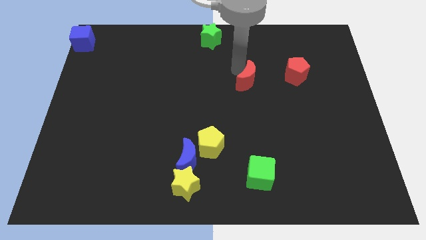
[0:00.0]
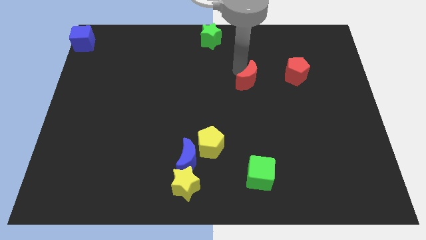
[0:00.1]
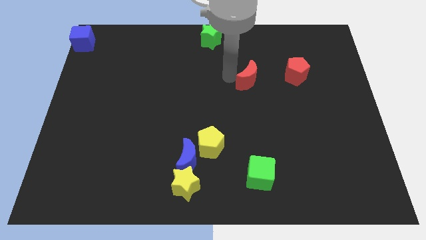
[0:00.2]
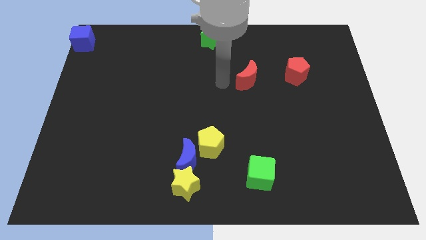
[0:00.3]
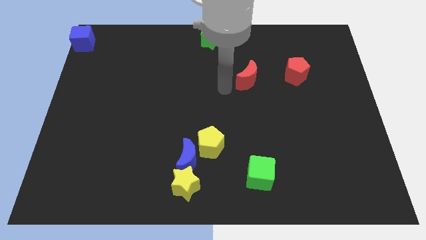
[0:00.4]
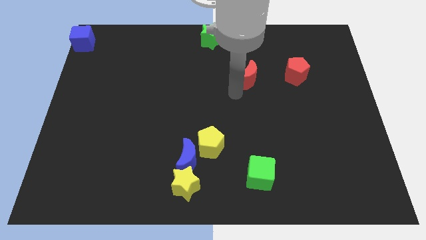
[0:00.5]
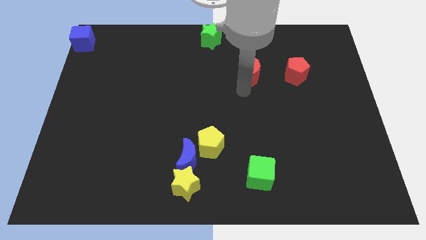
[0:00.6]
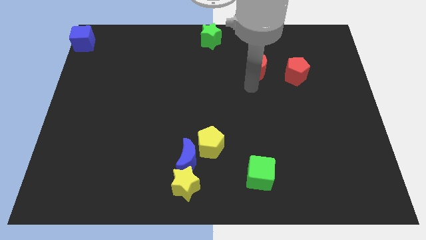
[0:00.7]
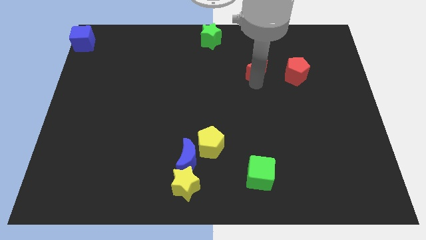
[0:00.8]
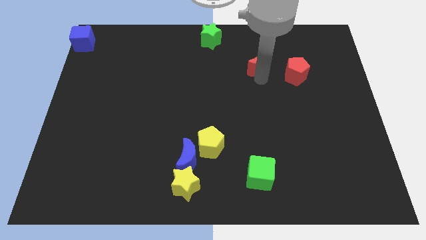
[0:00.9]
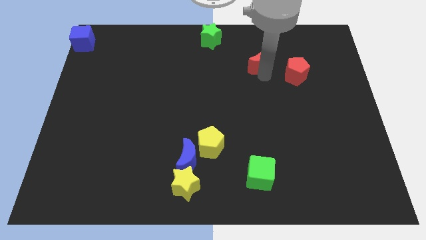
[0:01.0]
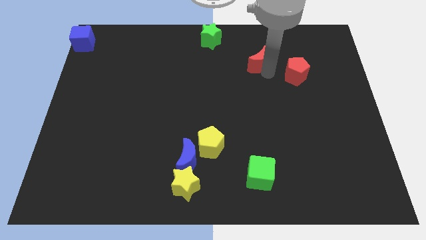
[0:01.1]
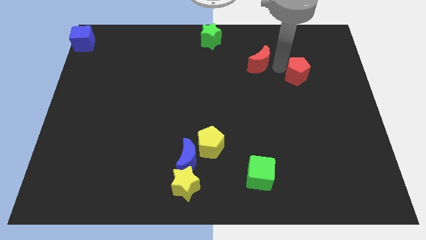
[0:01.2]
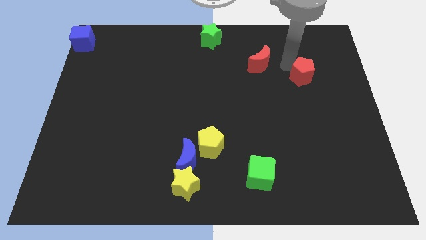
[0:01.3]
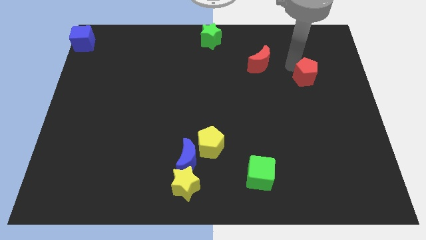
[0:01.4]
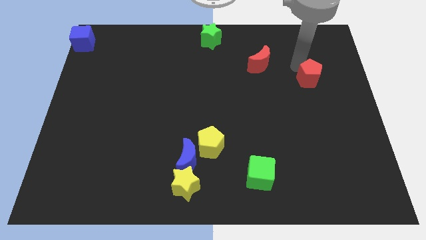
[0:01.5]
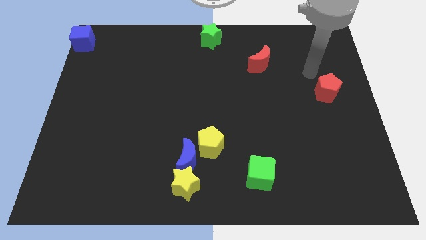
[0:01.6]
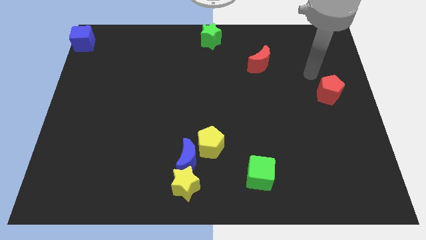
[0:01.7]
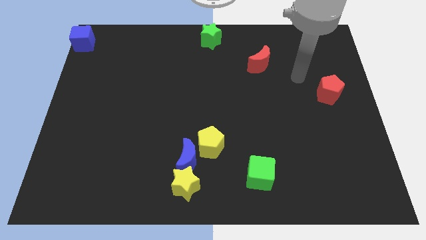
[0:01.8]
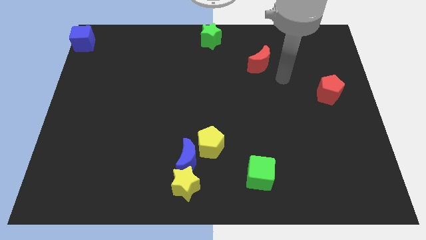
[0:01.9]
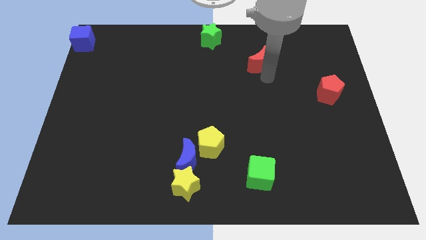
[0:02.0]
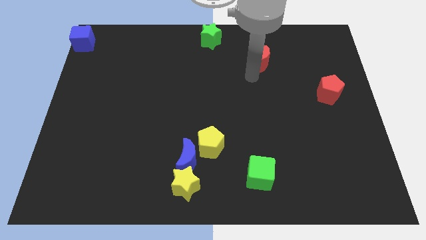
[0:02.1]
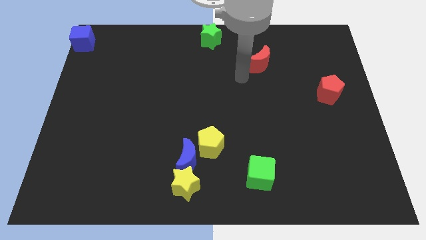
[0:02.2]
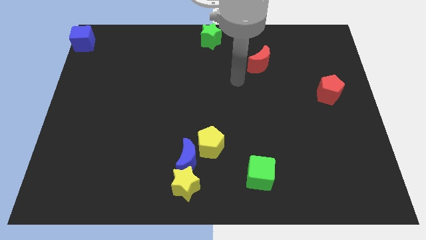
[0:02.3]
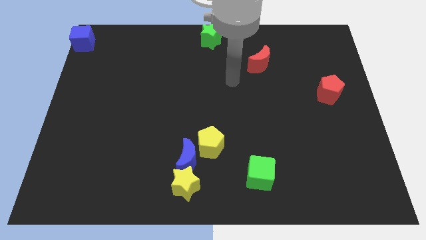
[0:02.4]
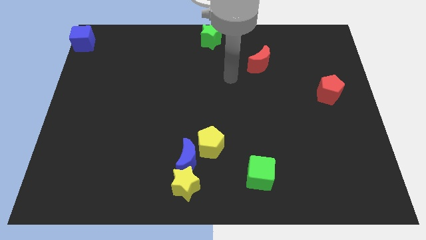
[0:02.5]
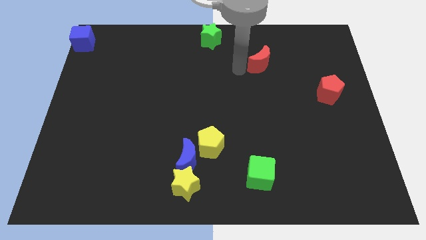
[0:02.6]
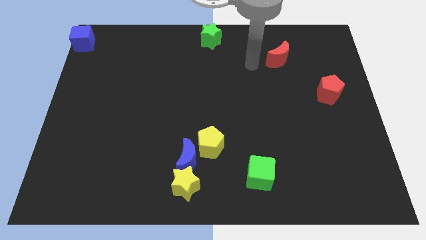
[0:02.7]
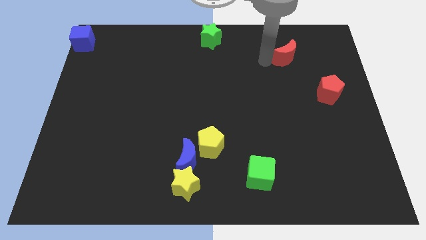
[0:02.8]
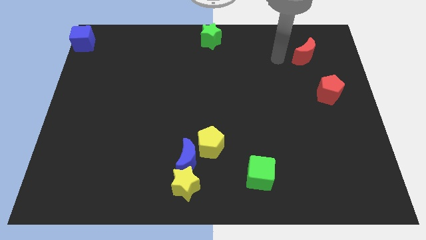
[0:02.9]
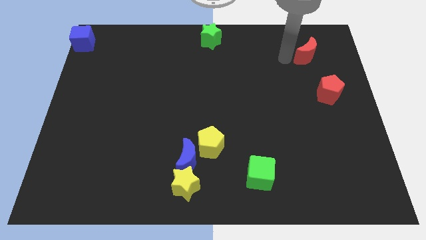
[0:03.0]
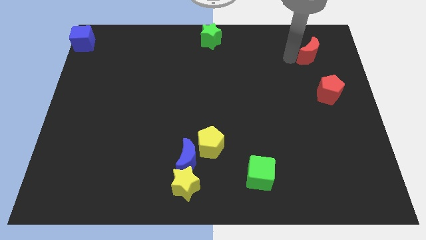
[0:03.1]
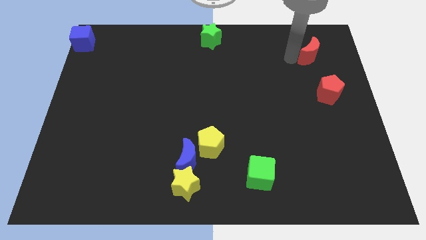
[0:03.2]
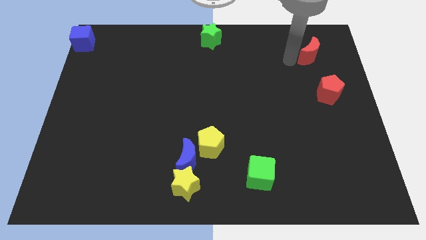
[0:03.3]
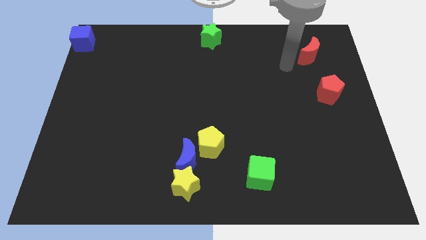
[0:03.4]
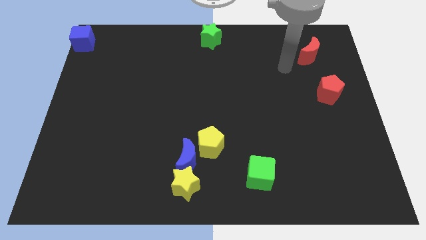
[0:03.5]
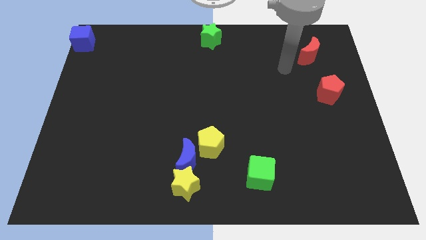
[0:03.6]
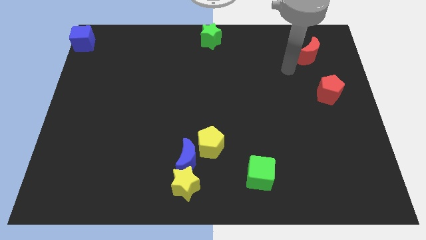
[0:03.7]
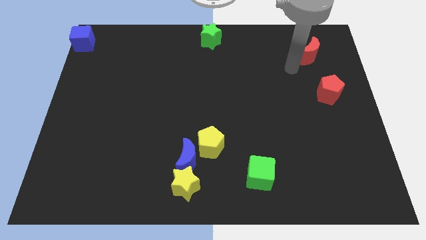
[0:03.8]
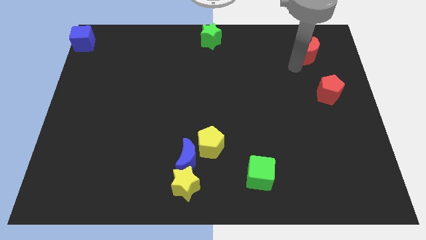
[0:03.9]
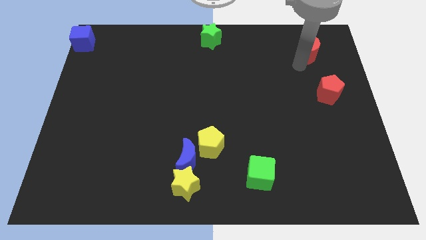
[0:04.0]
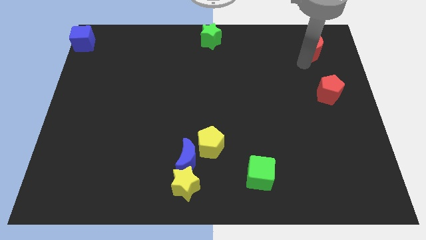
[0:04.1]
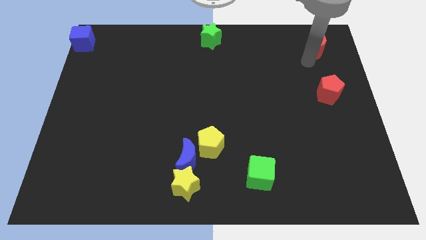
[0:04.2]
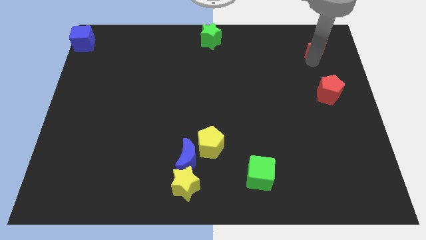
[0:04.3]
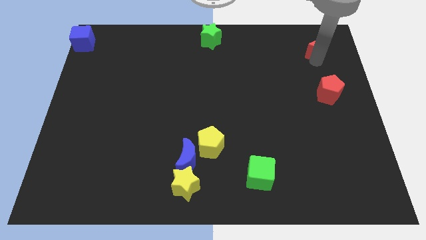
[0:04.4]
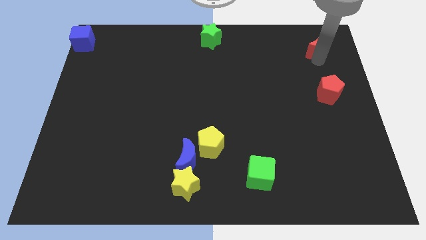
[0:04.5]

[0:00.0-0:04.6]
move the red crescent vertically above the red pentagon

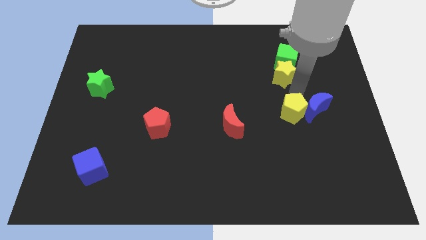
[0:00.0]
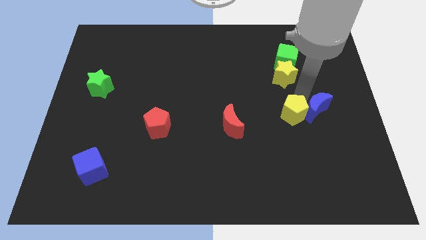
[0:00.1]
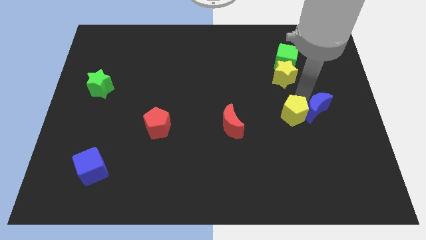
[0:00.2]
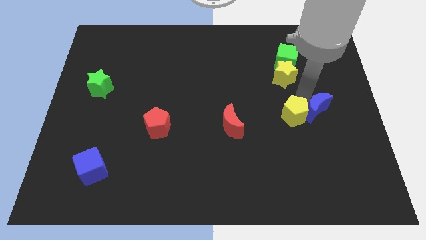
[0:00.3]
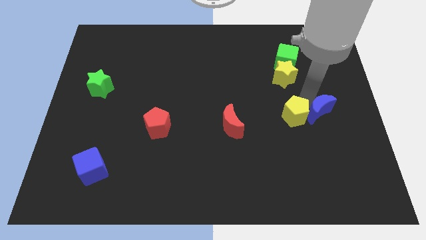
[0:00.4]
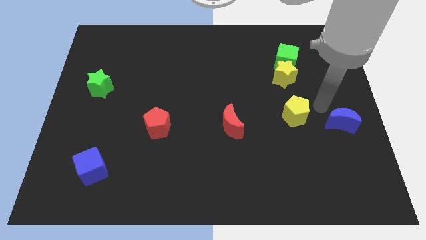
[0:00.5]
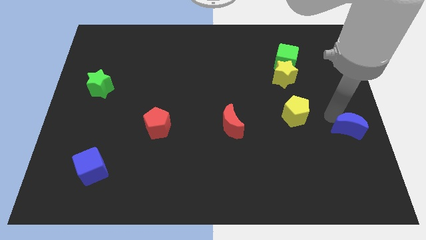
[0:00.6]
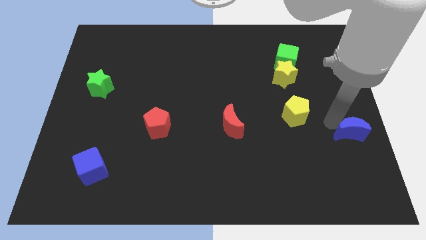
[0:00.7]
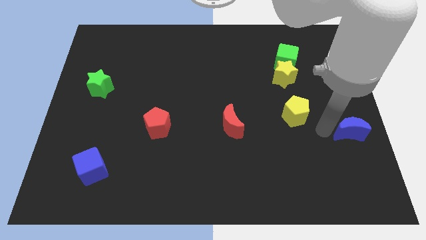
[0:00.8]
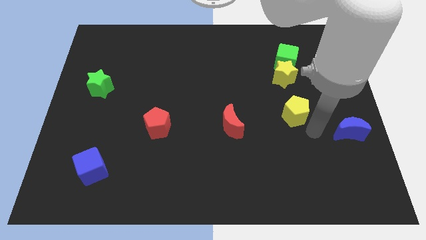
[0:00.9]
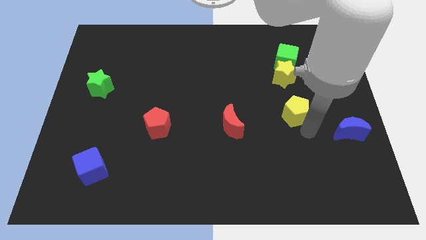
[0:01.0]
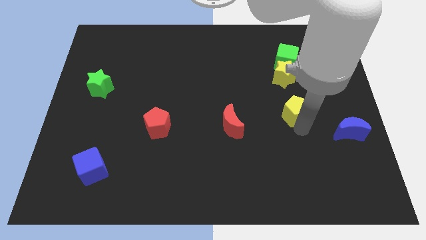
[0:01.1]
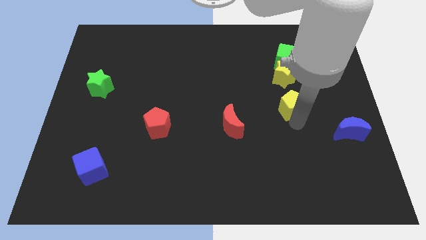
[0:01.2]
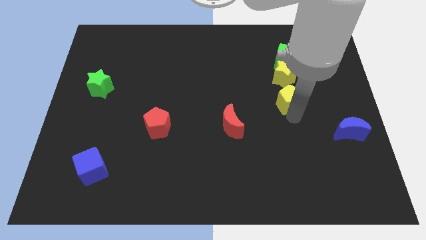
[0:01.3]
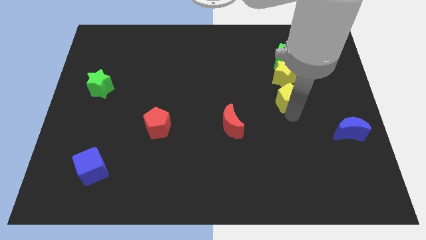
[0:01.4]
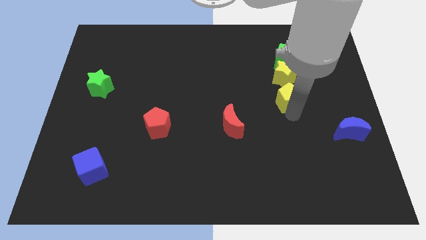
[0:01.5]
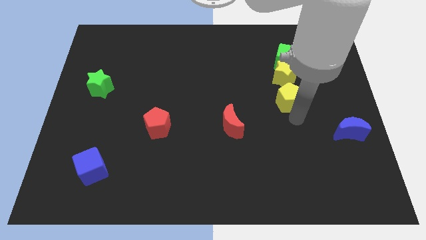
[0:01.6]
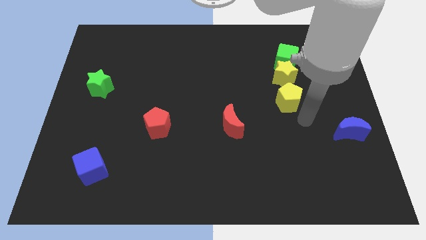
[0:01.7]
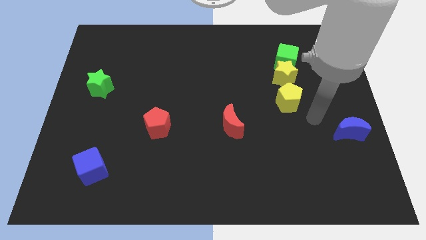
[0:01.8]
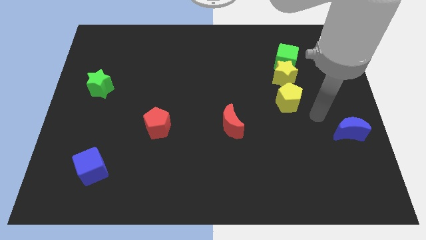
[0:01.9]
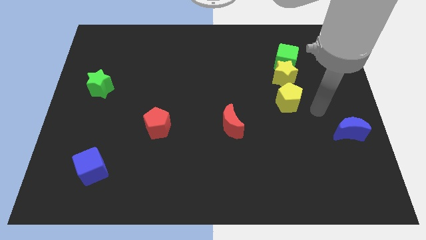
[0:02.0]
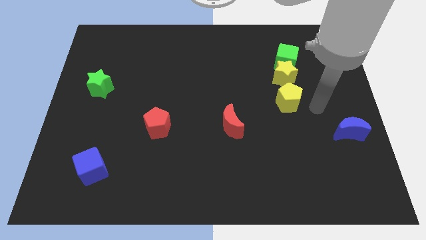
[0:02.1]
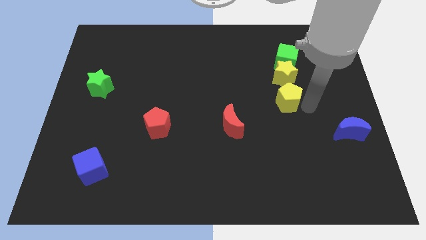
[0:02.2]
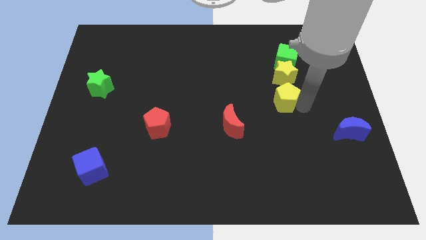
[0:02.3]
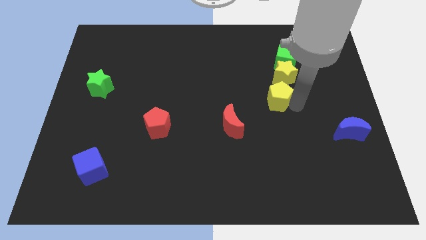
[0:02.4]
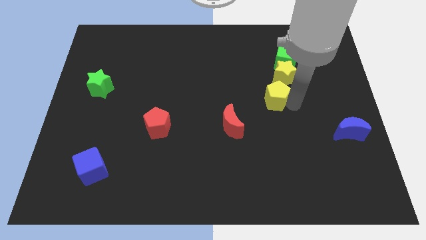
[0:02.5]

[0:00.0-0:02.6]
move the yellow pentagon diagonally bottom left to the yellow star

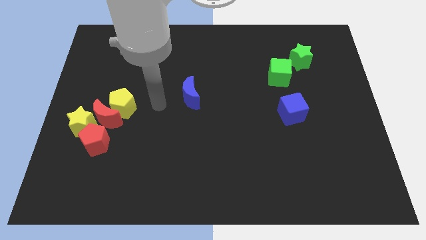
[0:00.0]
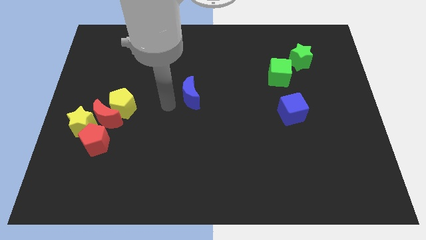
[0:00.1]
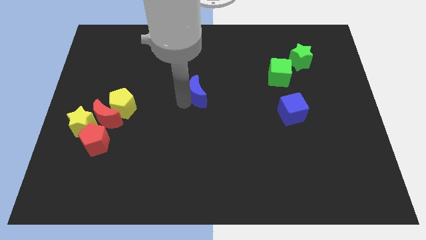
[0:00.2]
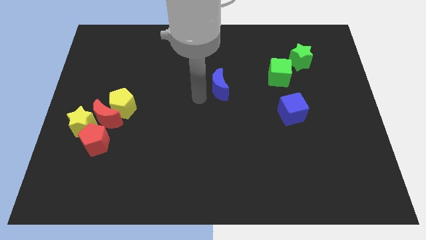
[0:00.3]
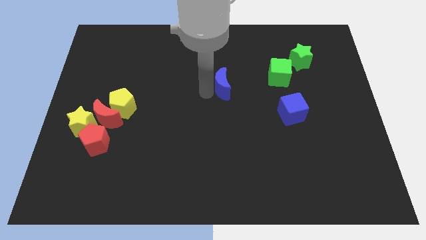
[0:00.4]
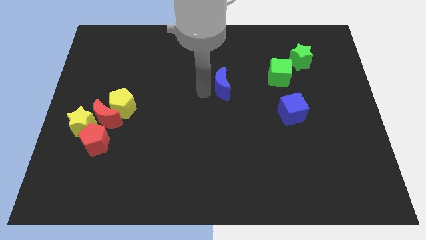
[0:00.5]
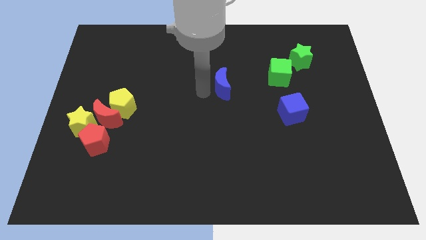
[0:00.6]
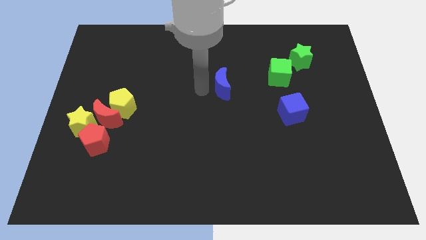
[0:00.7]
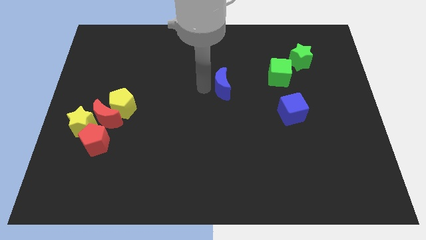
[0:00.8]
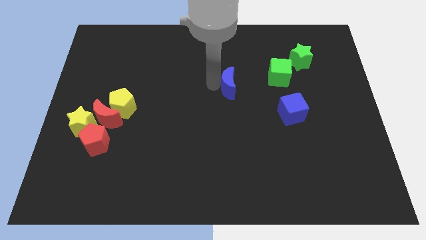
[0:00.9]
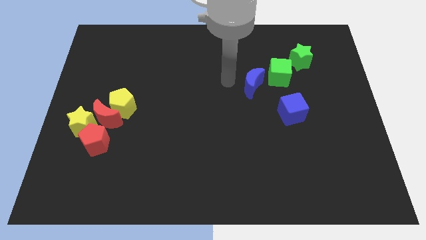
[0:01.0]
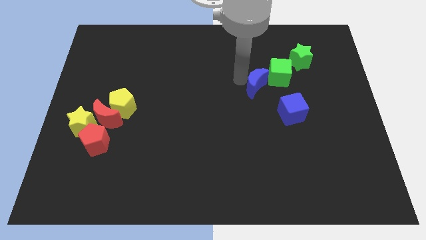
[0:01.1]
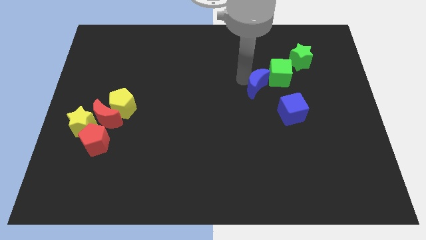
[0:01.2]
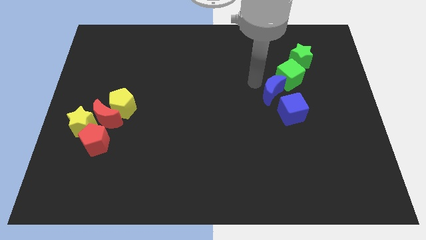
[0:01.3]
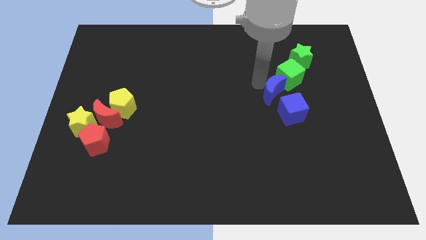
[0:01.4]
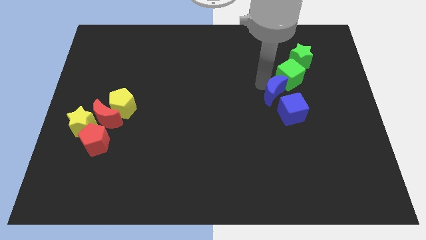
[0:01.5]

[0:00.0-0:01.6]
push the blue moon towards the green cube

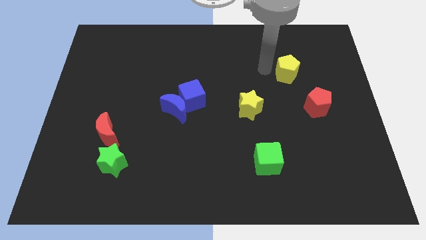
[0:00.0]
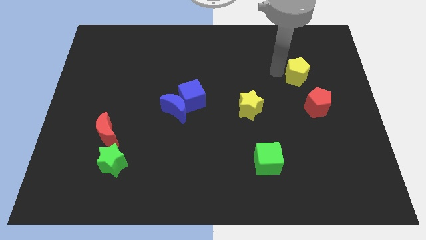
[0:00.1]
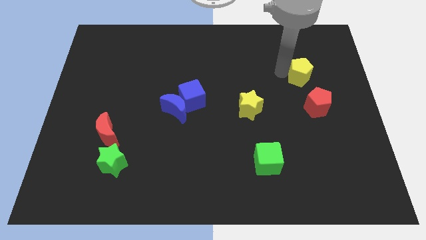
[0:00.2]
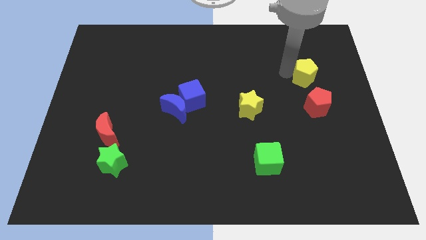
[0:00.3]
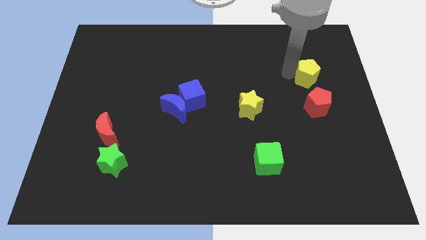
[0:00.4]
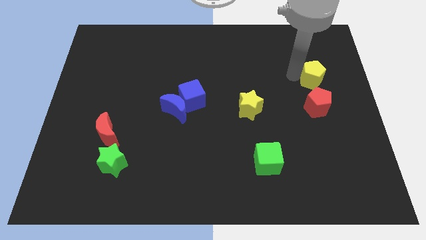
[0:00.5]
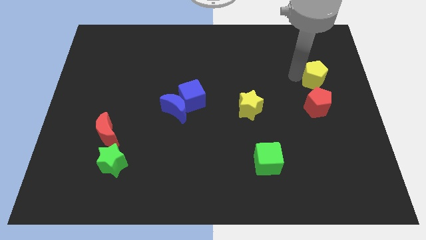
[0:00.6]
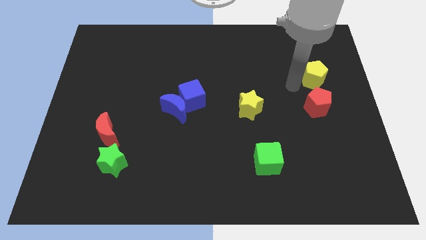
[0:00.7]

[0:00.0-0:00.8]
move yellow pentagon above red pentagon
